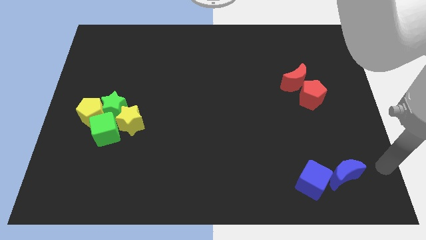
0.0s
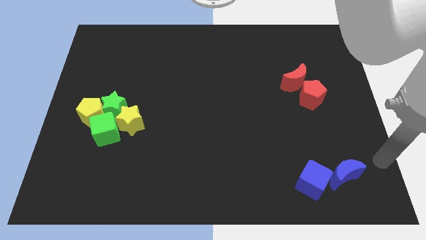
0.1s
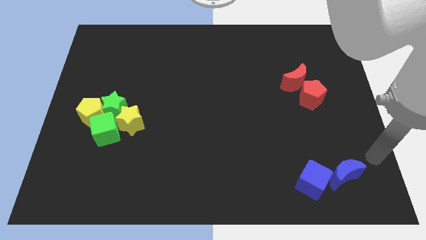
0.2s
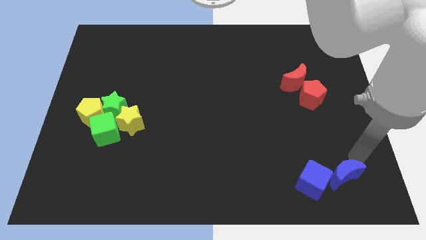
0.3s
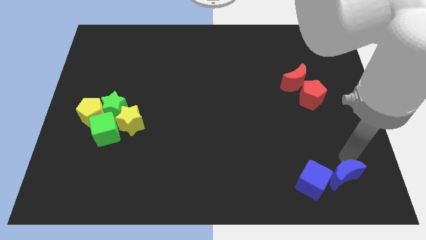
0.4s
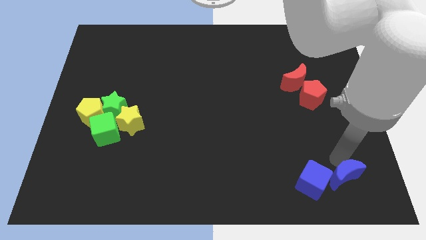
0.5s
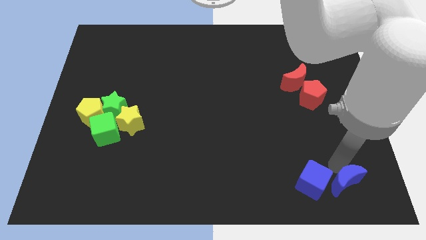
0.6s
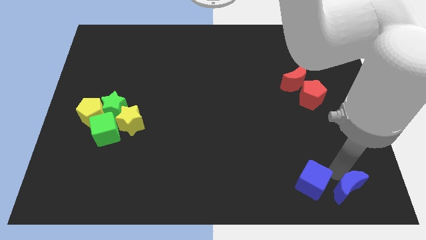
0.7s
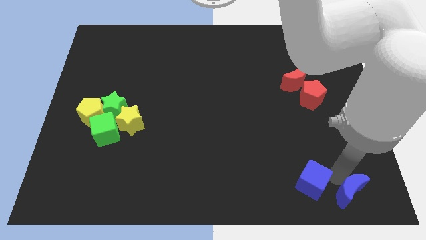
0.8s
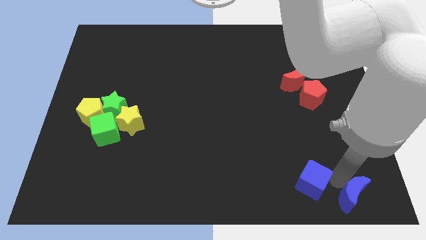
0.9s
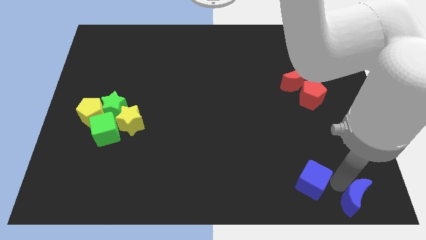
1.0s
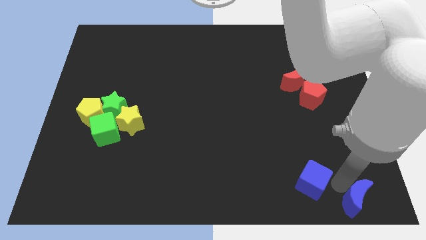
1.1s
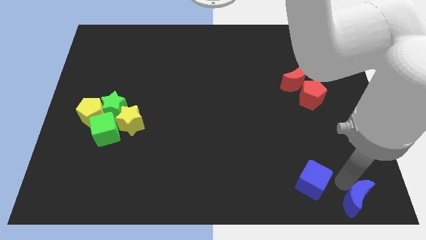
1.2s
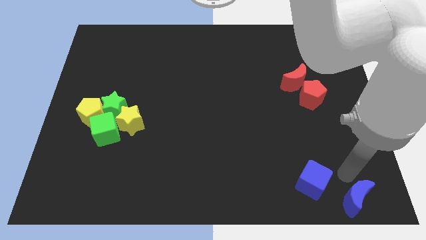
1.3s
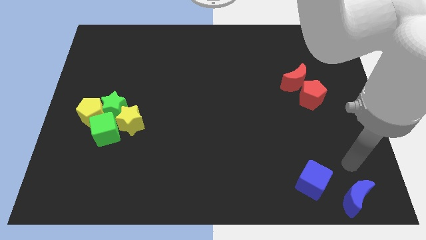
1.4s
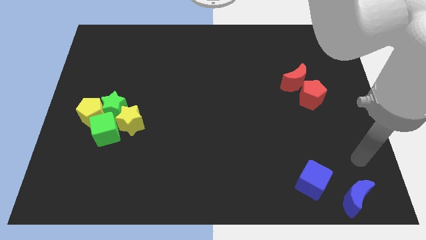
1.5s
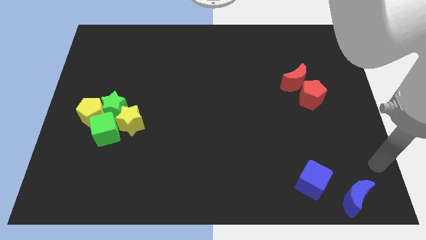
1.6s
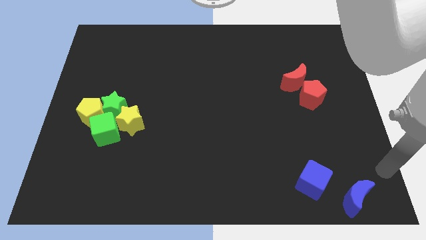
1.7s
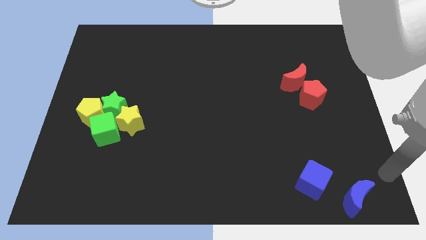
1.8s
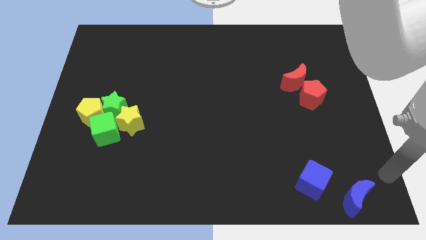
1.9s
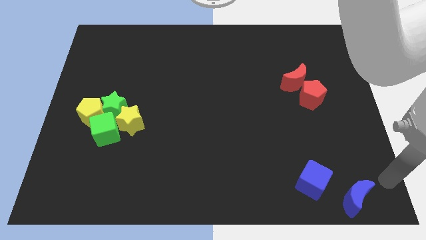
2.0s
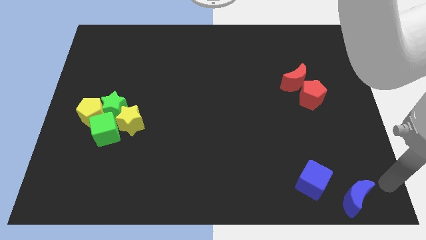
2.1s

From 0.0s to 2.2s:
separate the blue moon towards bottom right corner

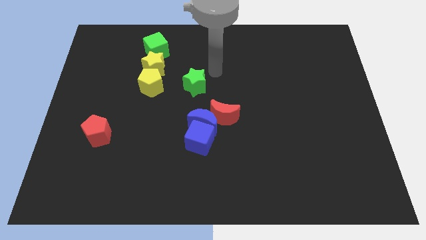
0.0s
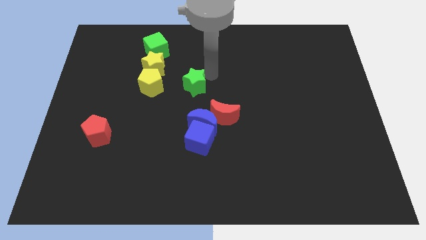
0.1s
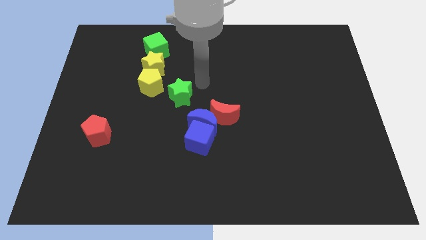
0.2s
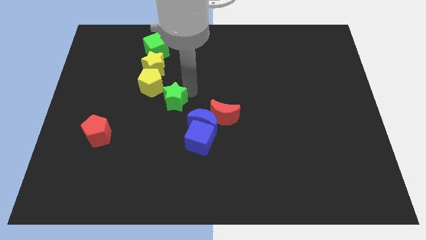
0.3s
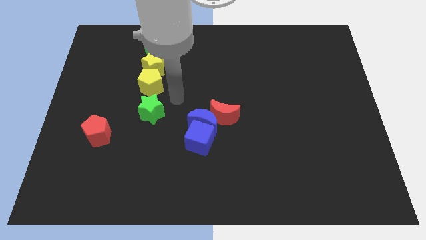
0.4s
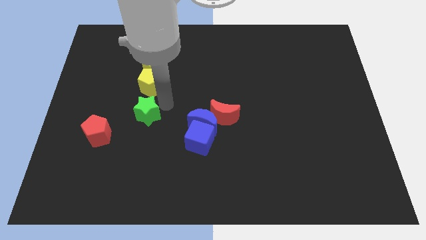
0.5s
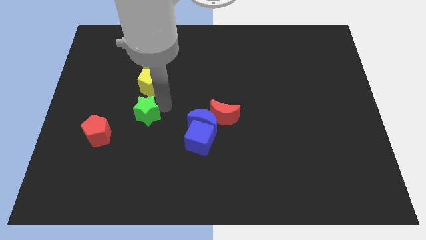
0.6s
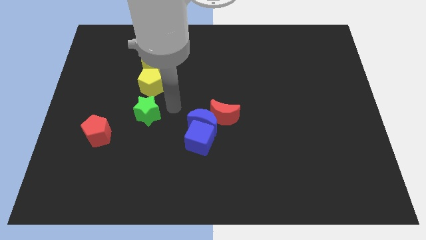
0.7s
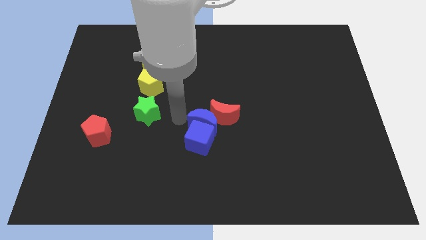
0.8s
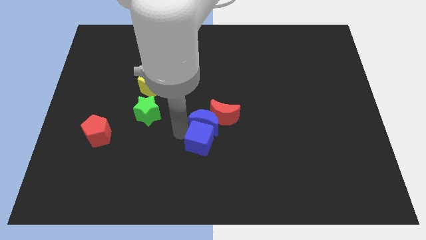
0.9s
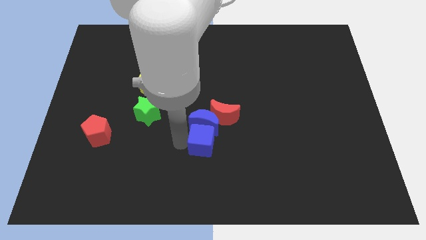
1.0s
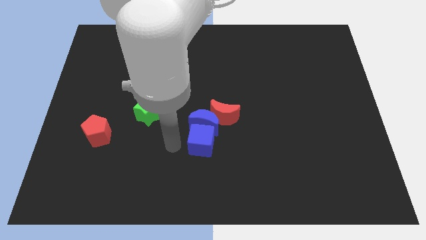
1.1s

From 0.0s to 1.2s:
place the green star below the yellow pentagon

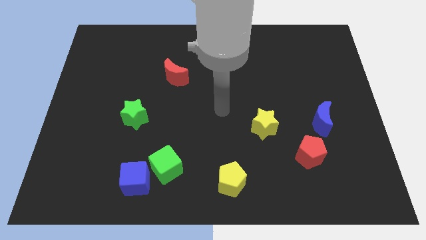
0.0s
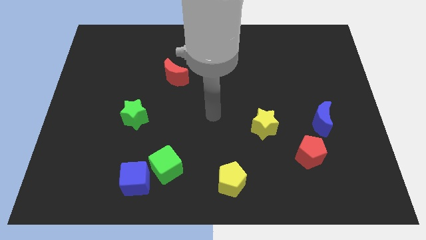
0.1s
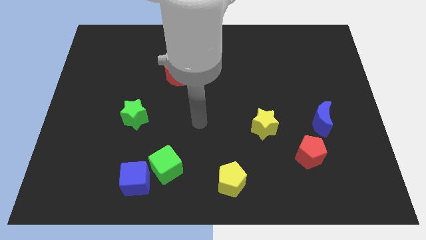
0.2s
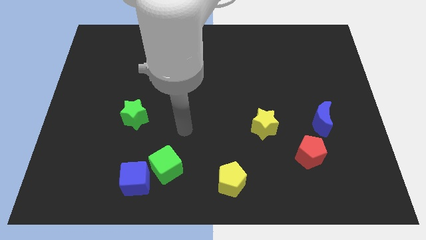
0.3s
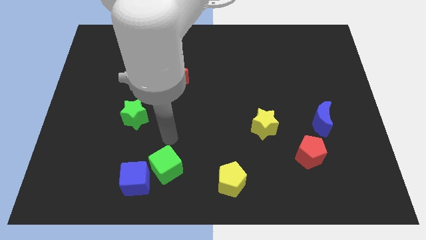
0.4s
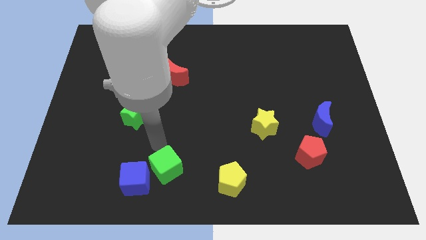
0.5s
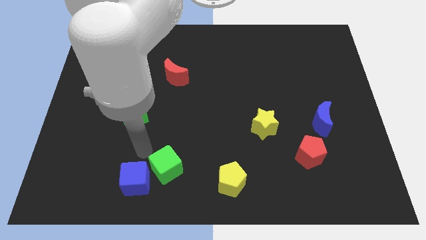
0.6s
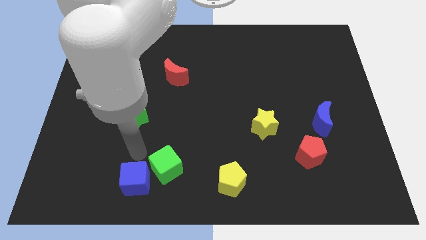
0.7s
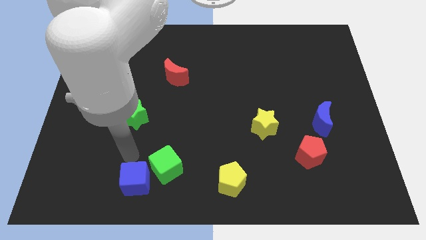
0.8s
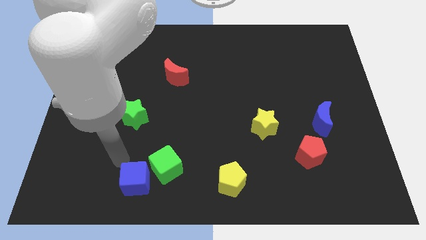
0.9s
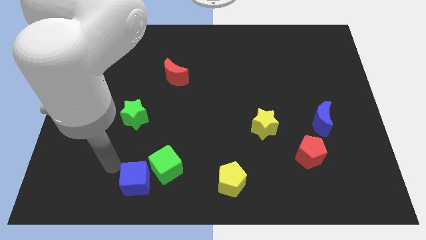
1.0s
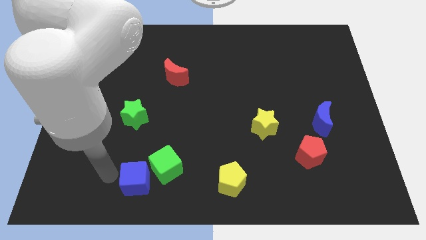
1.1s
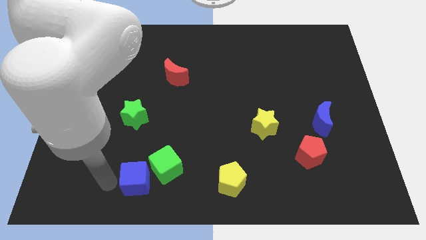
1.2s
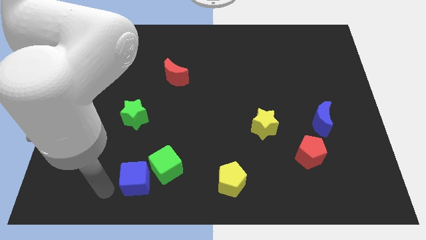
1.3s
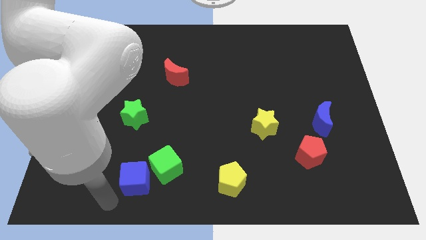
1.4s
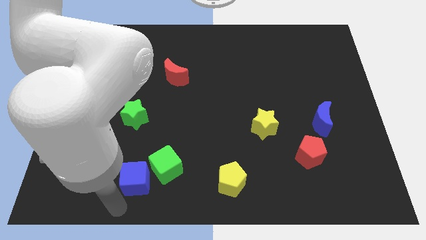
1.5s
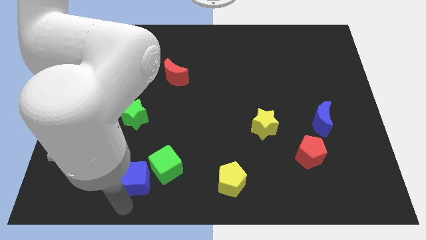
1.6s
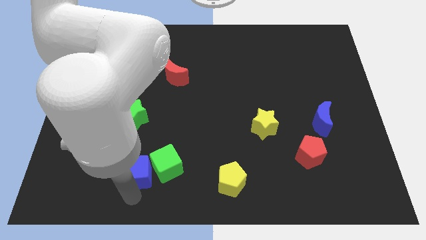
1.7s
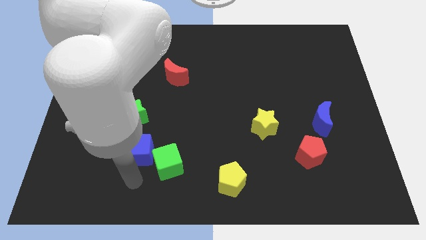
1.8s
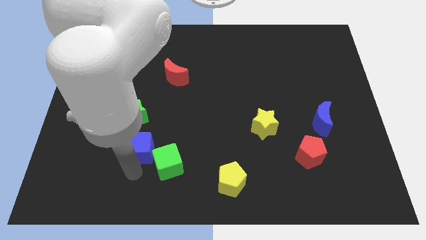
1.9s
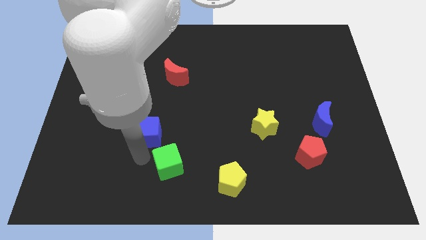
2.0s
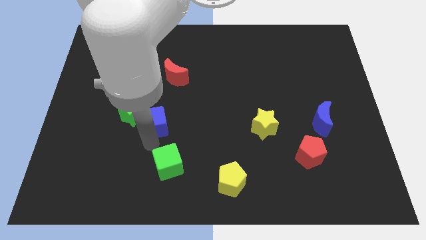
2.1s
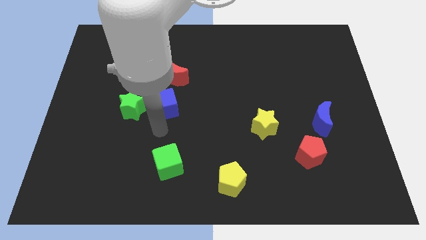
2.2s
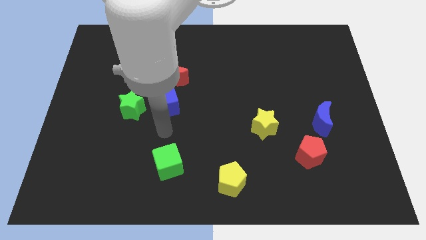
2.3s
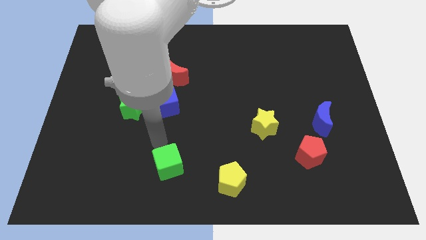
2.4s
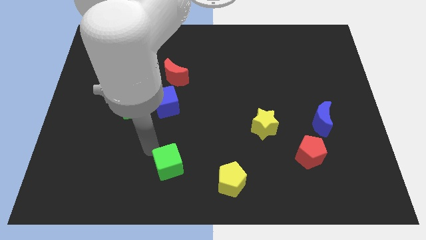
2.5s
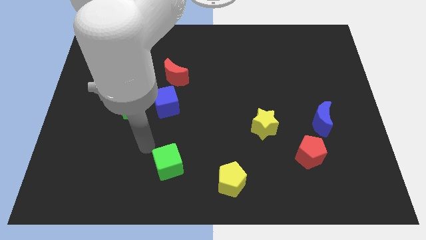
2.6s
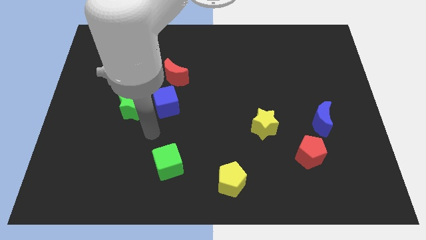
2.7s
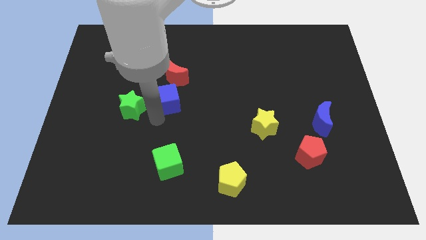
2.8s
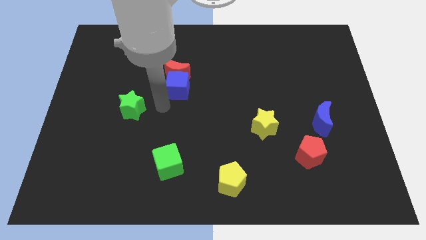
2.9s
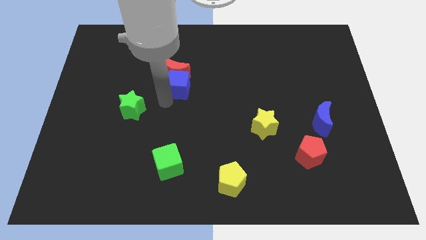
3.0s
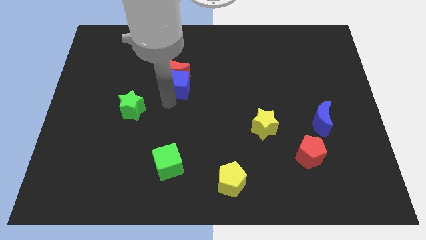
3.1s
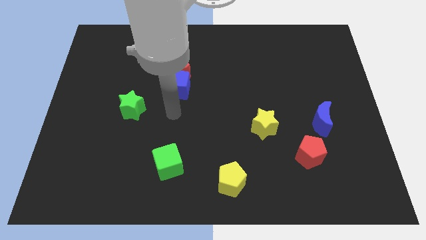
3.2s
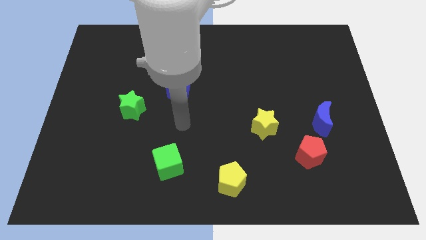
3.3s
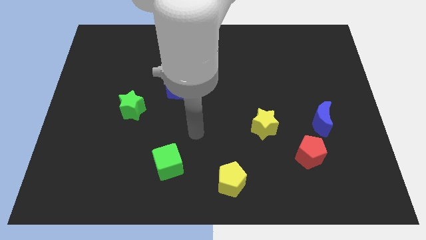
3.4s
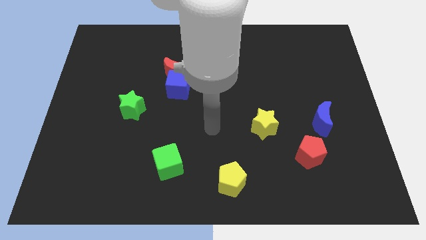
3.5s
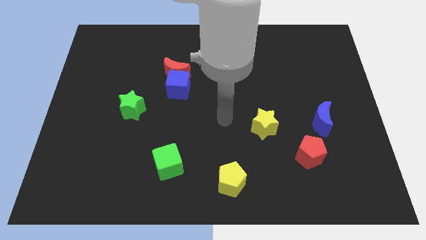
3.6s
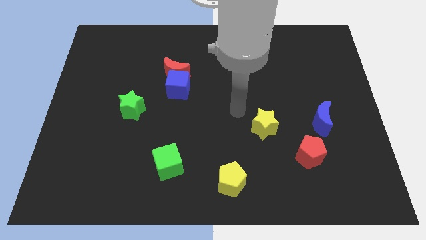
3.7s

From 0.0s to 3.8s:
push the blue cube into the red crescent

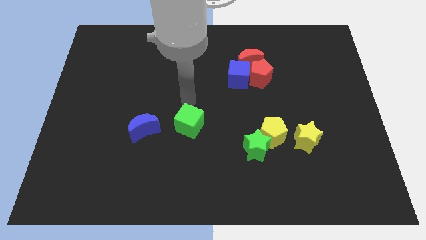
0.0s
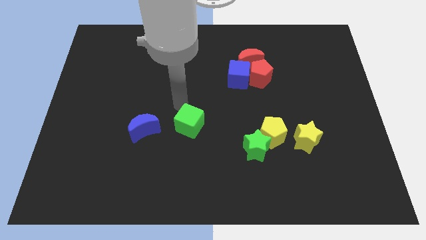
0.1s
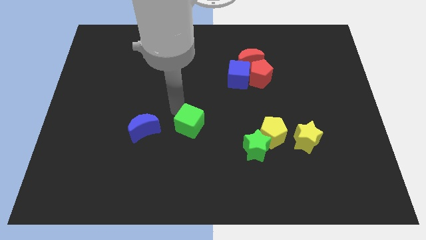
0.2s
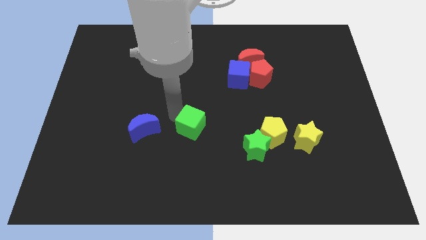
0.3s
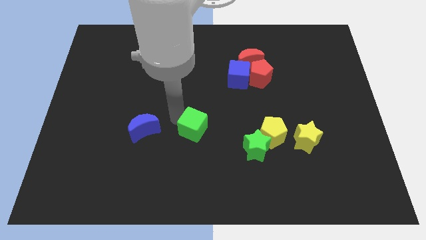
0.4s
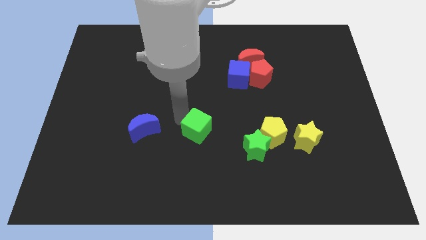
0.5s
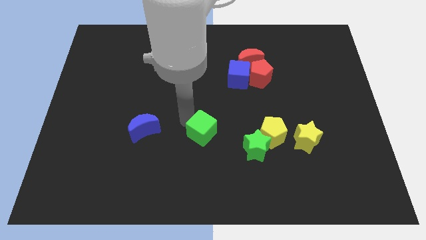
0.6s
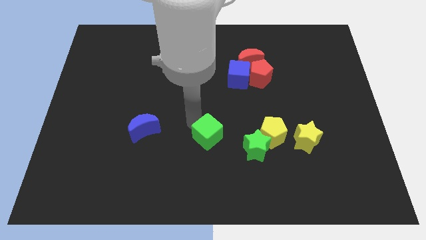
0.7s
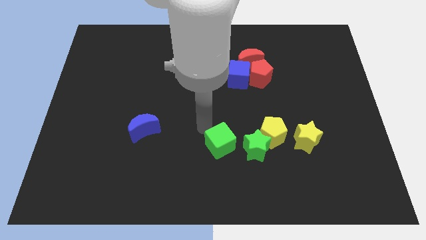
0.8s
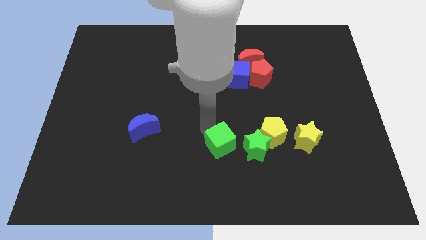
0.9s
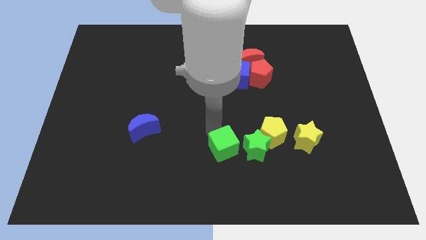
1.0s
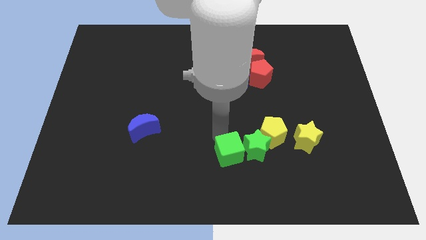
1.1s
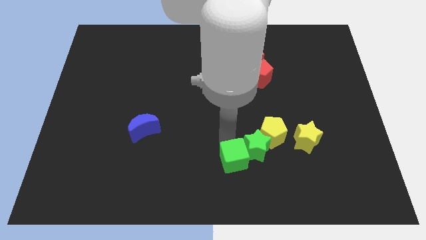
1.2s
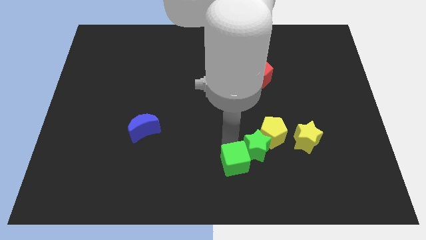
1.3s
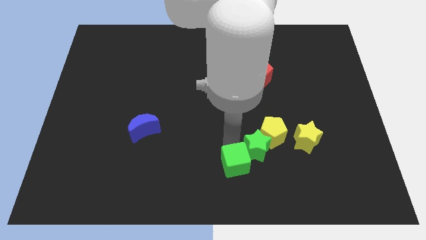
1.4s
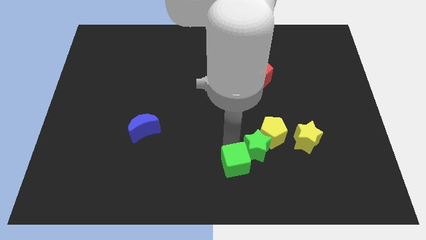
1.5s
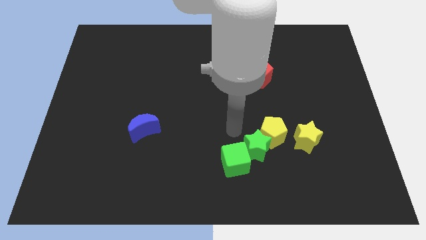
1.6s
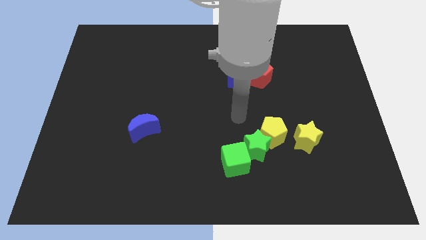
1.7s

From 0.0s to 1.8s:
slide the green cube to bottom left to the star
